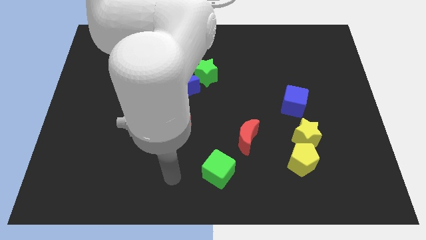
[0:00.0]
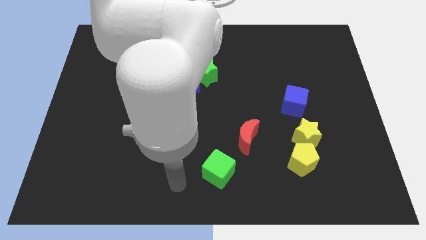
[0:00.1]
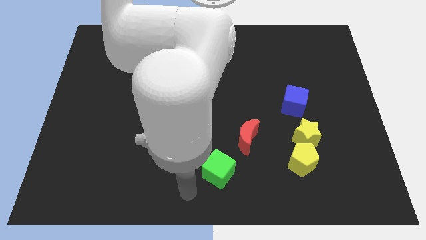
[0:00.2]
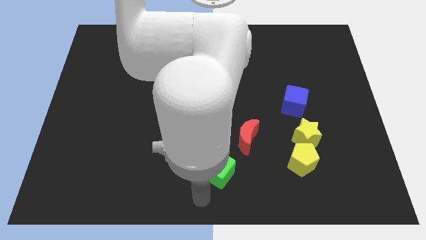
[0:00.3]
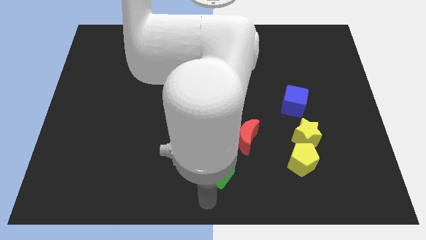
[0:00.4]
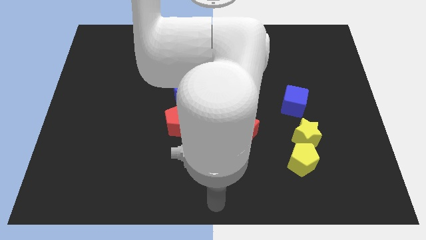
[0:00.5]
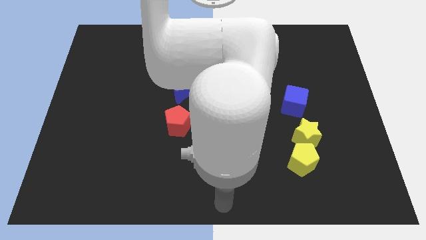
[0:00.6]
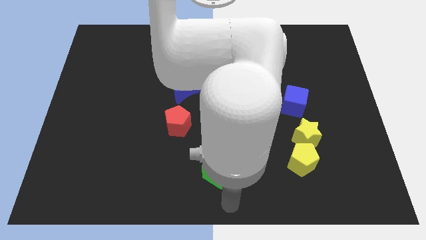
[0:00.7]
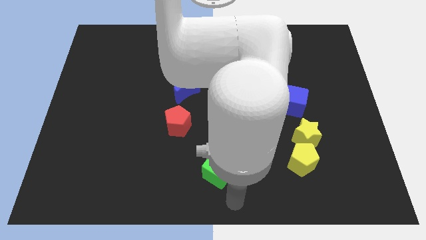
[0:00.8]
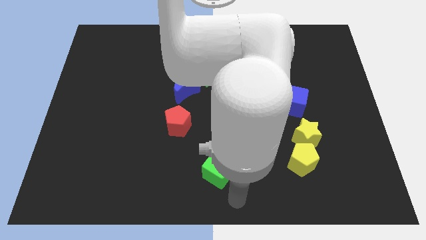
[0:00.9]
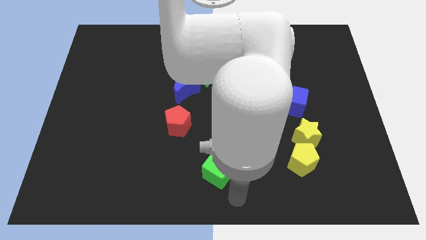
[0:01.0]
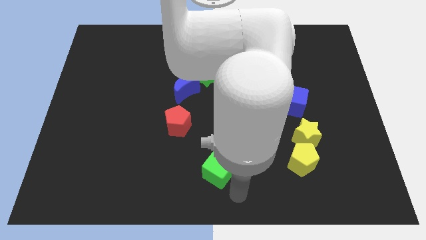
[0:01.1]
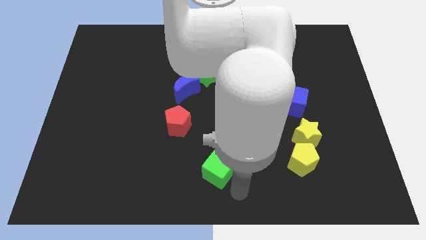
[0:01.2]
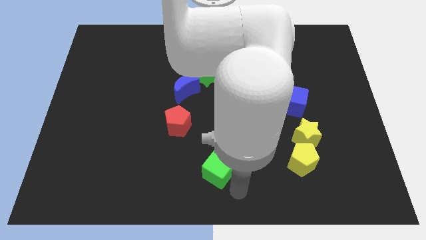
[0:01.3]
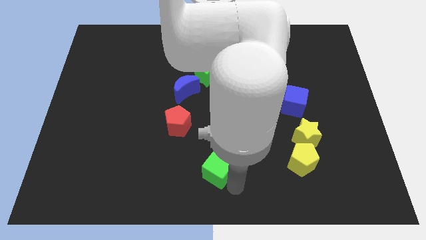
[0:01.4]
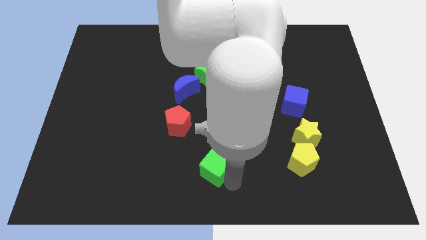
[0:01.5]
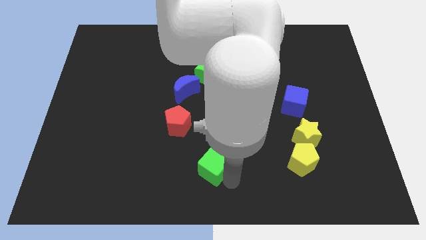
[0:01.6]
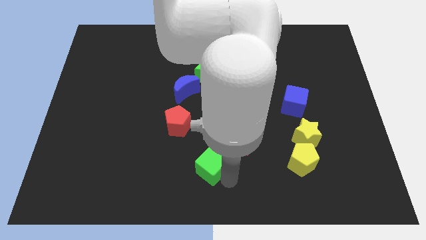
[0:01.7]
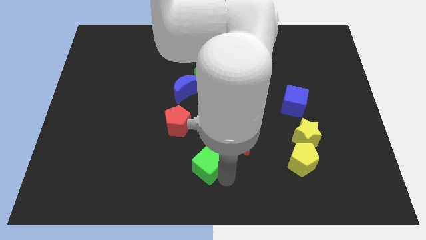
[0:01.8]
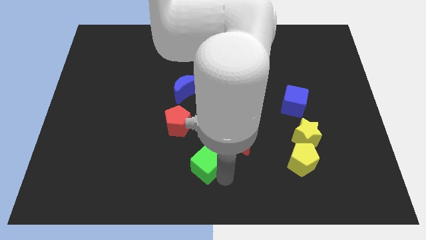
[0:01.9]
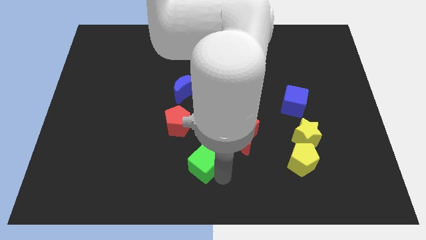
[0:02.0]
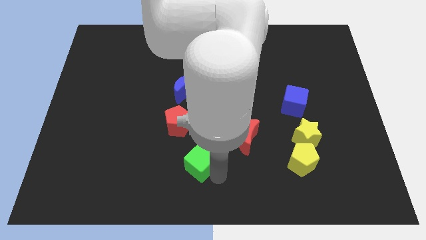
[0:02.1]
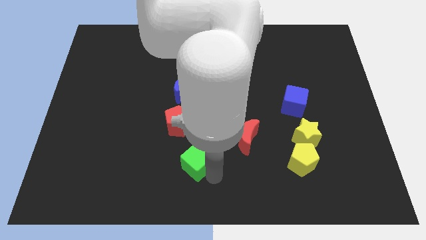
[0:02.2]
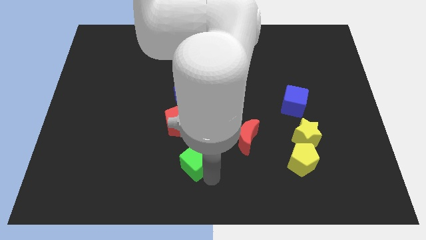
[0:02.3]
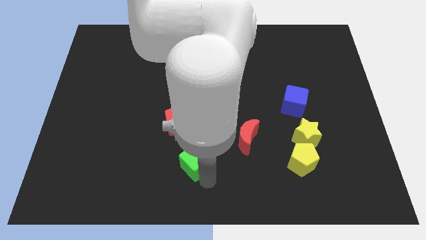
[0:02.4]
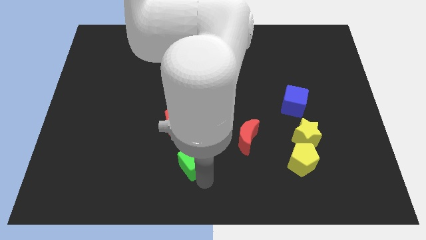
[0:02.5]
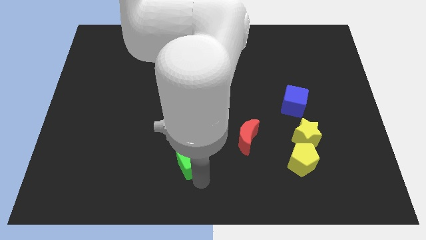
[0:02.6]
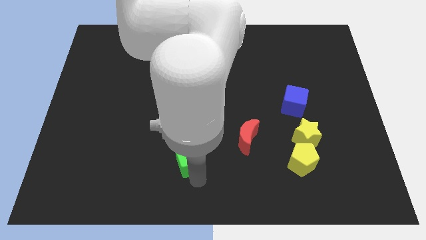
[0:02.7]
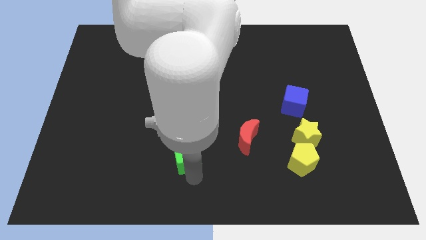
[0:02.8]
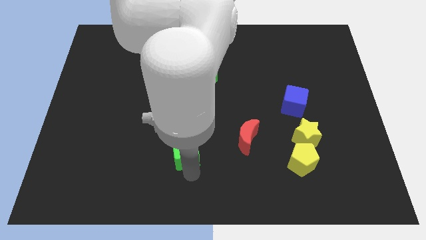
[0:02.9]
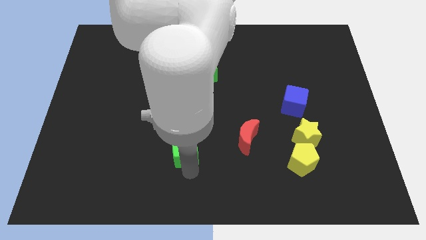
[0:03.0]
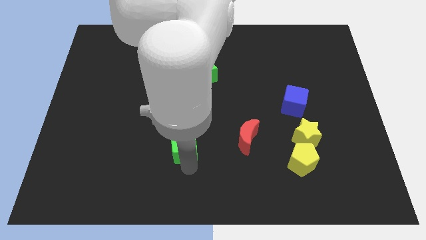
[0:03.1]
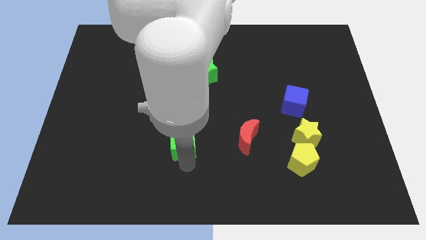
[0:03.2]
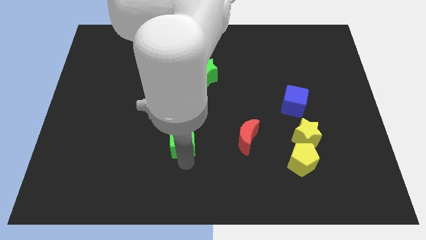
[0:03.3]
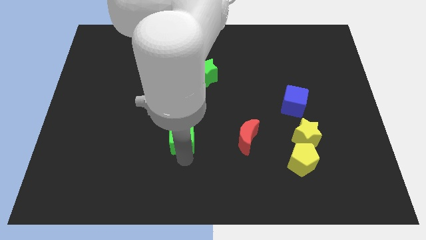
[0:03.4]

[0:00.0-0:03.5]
slide the green cube towards the red pentagon

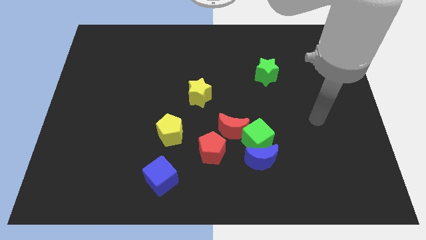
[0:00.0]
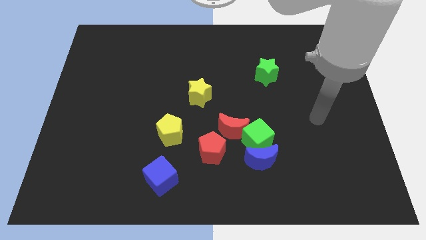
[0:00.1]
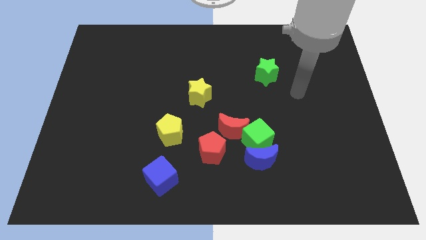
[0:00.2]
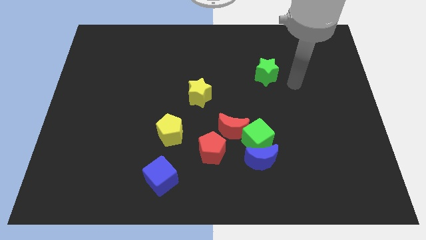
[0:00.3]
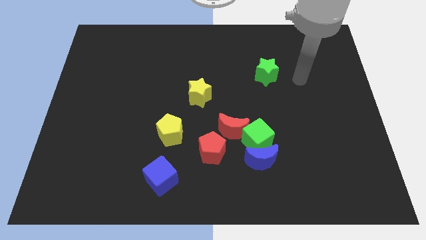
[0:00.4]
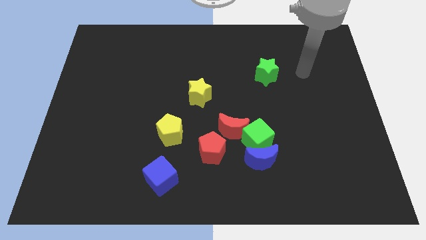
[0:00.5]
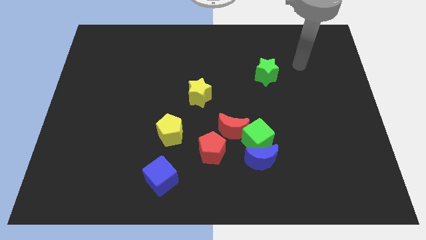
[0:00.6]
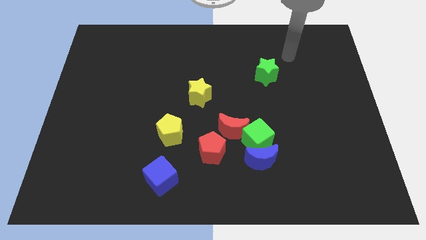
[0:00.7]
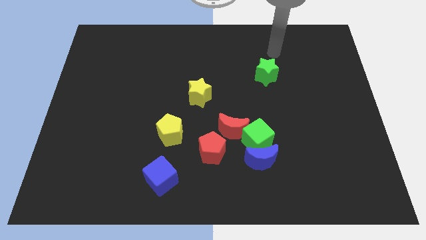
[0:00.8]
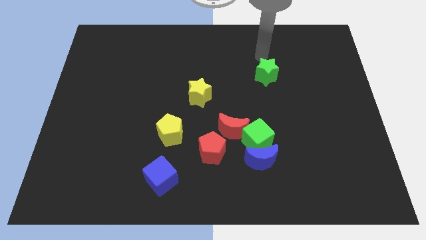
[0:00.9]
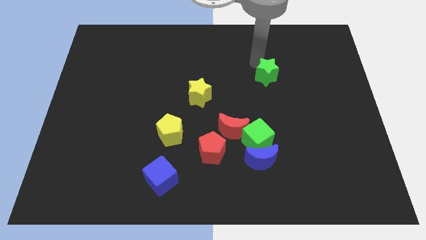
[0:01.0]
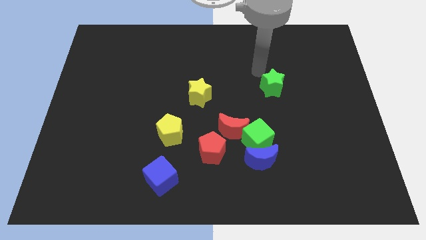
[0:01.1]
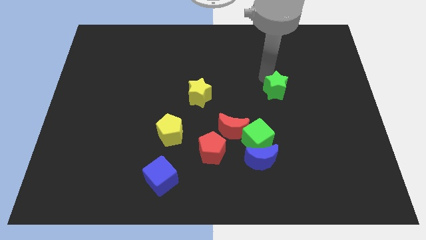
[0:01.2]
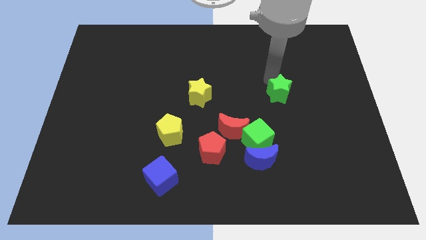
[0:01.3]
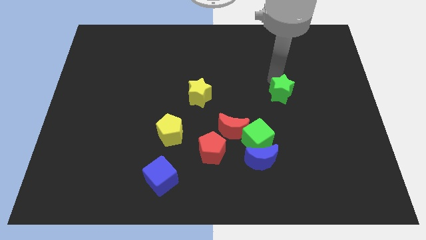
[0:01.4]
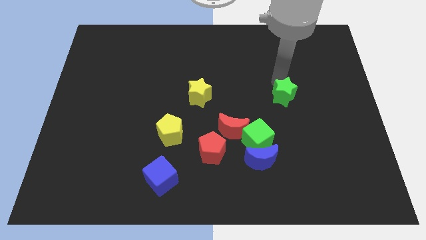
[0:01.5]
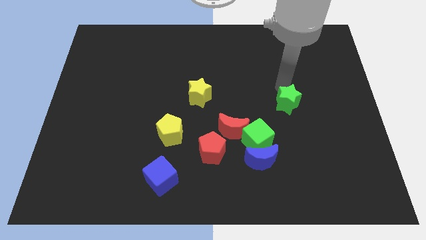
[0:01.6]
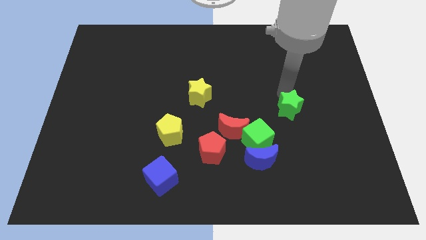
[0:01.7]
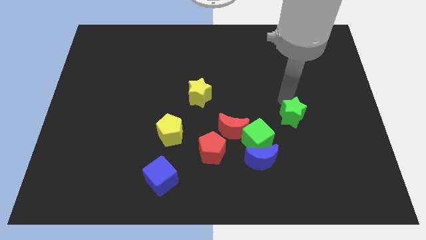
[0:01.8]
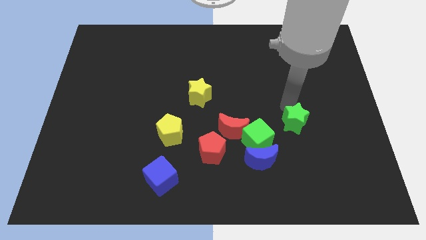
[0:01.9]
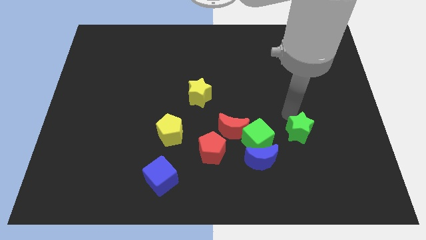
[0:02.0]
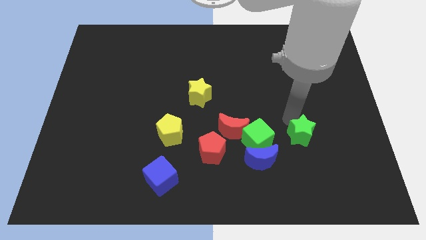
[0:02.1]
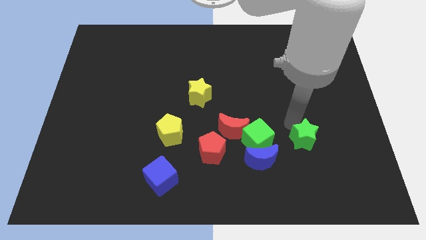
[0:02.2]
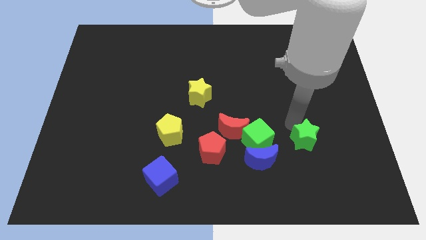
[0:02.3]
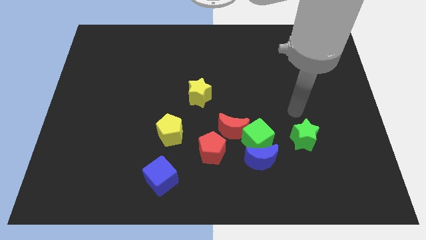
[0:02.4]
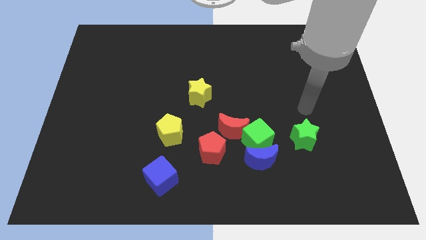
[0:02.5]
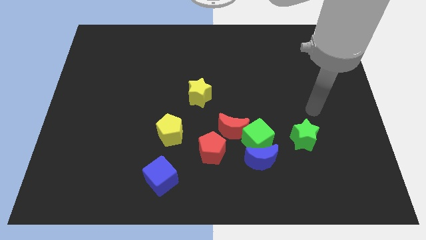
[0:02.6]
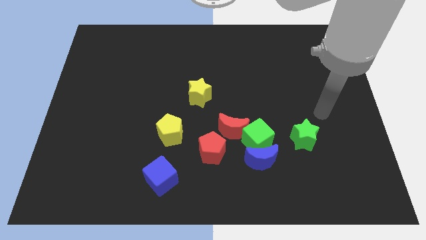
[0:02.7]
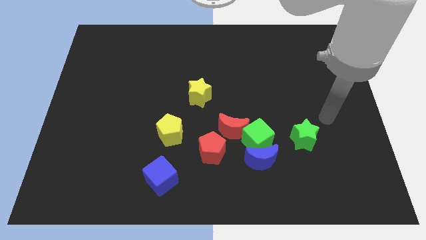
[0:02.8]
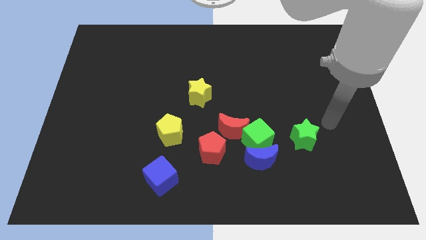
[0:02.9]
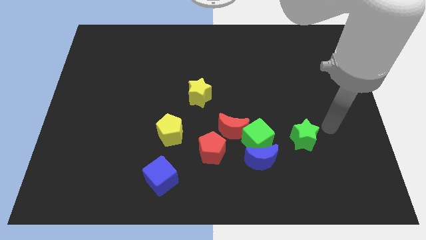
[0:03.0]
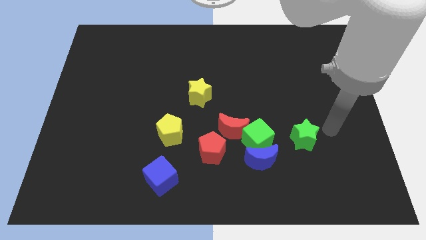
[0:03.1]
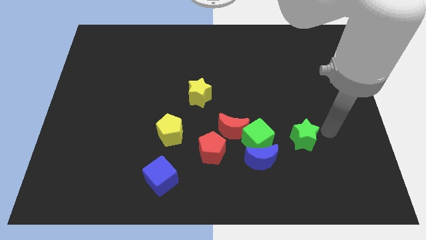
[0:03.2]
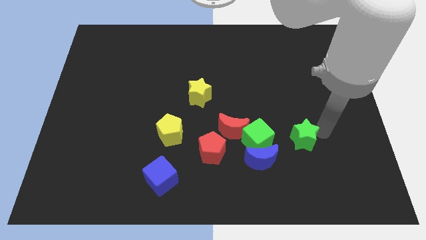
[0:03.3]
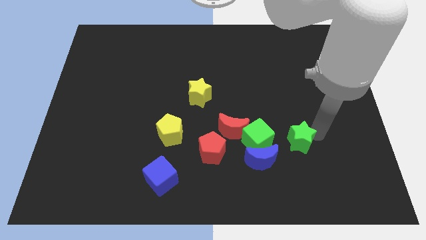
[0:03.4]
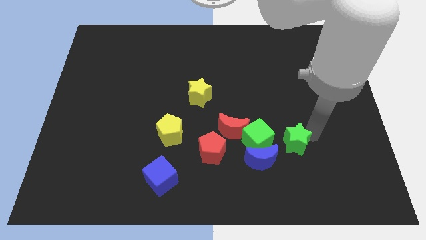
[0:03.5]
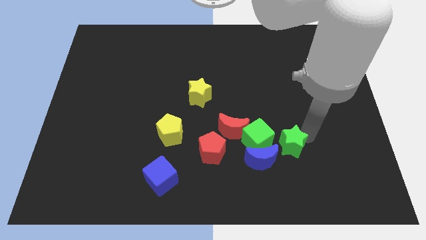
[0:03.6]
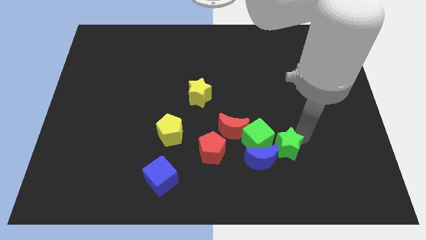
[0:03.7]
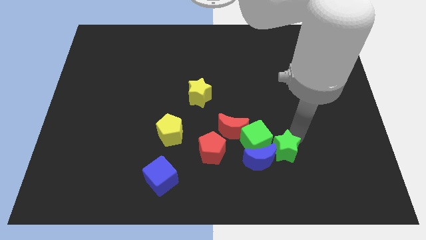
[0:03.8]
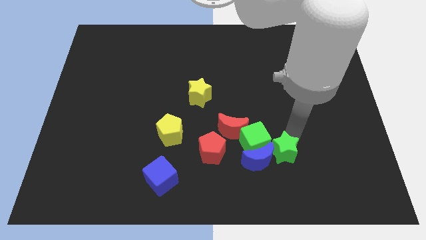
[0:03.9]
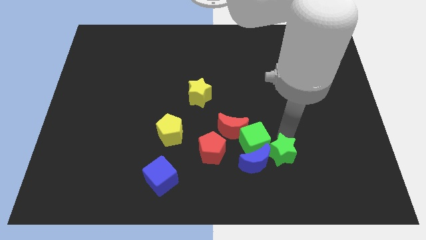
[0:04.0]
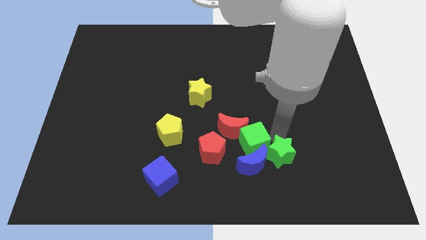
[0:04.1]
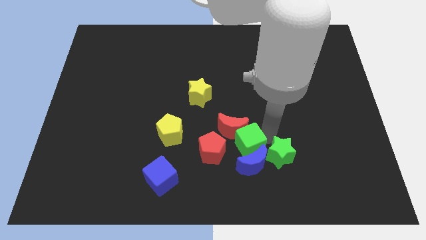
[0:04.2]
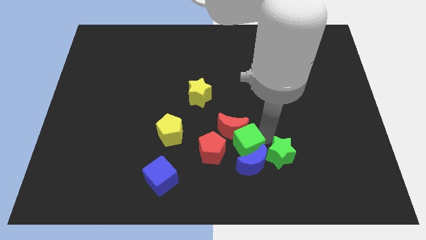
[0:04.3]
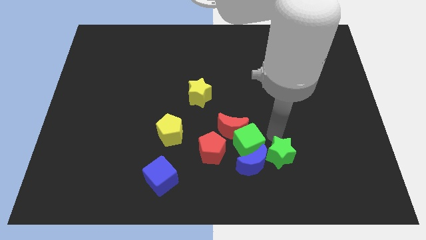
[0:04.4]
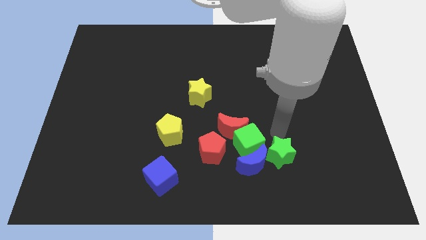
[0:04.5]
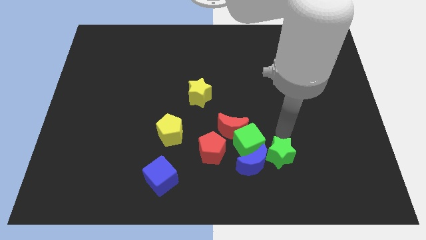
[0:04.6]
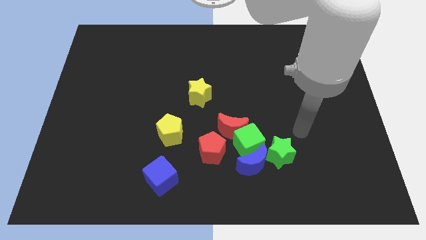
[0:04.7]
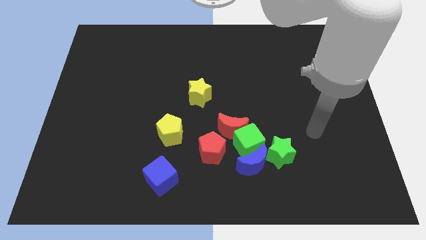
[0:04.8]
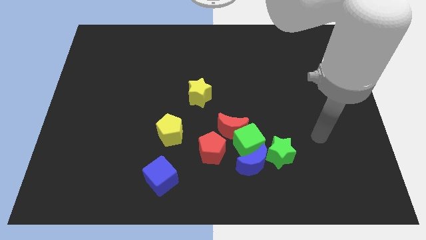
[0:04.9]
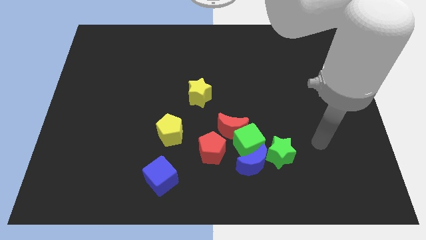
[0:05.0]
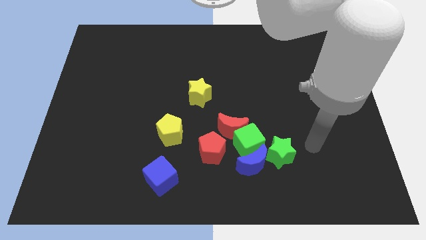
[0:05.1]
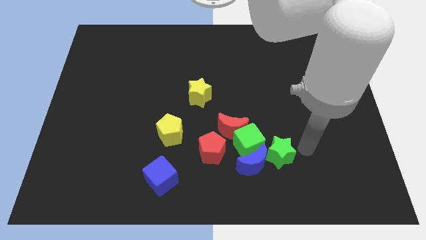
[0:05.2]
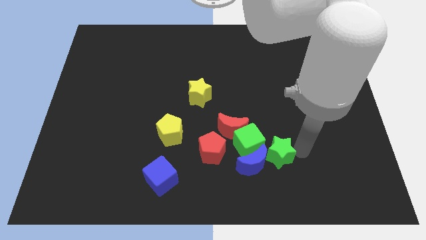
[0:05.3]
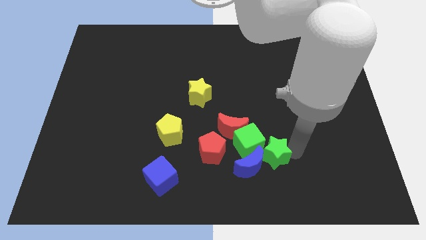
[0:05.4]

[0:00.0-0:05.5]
move the green star to the blue moon
